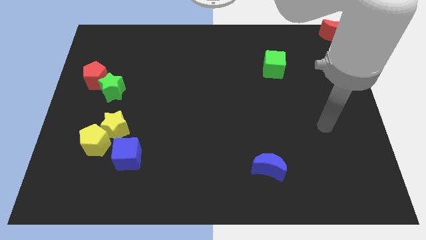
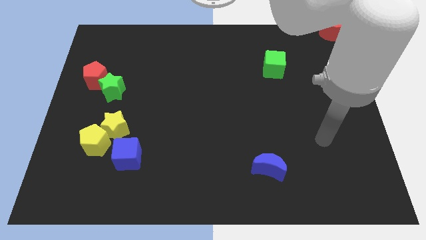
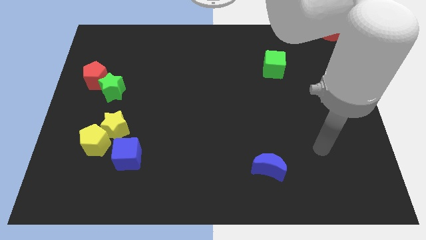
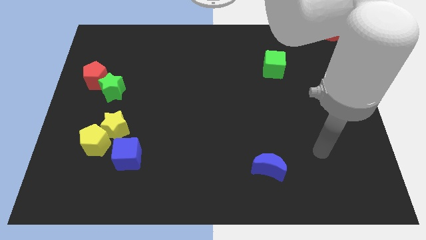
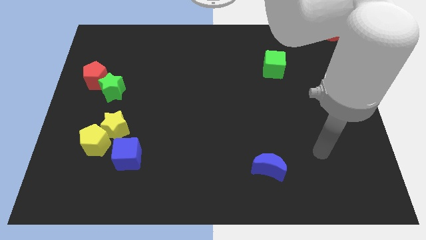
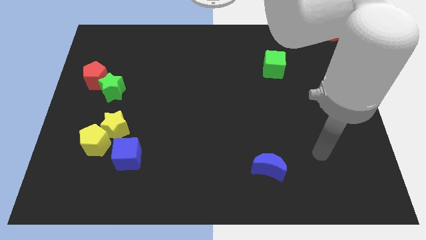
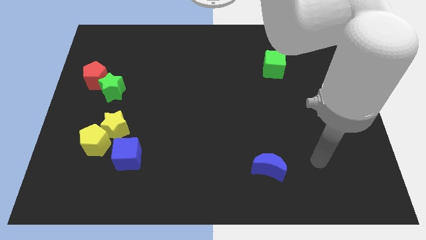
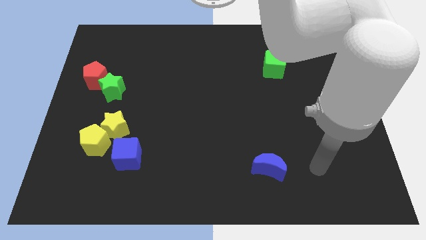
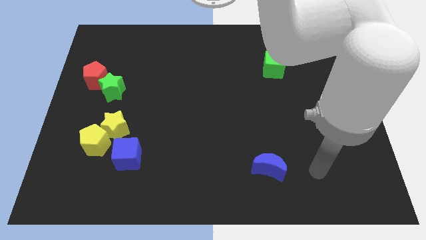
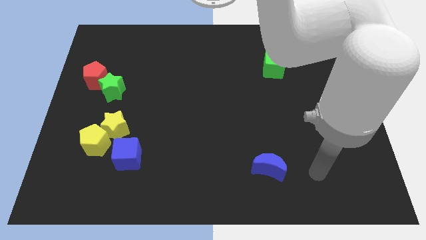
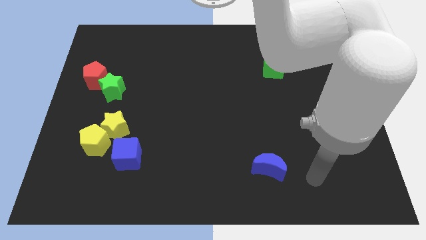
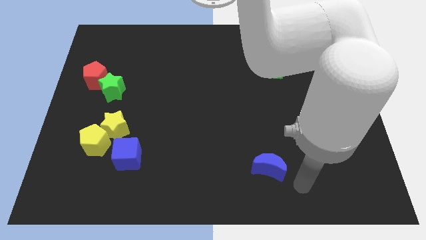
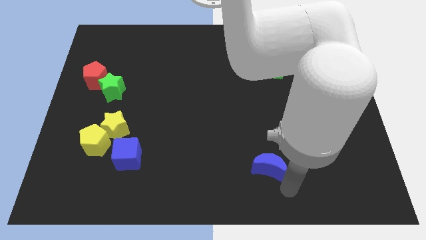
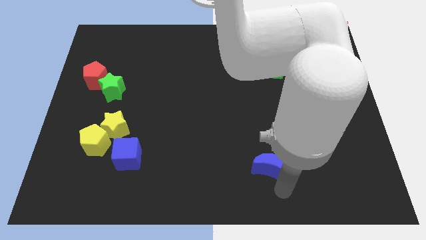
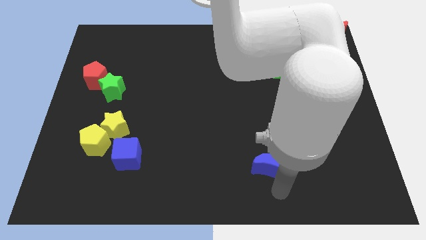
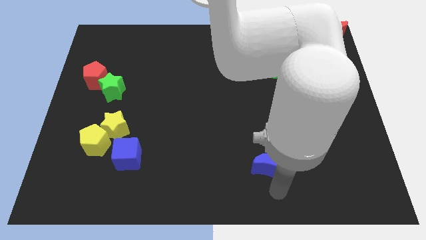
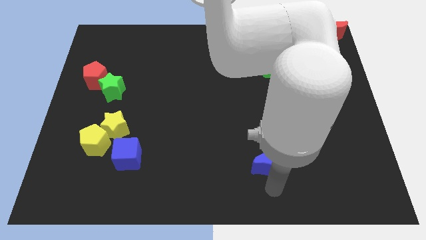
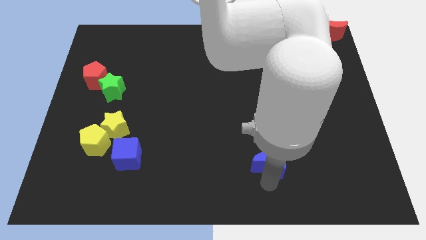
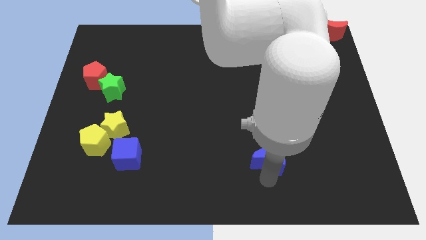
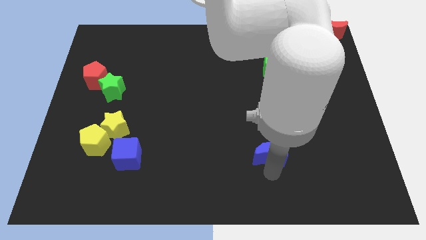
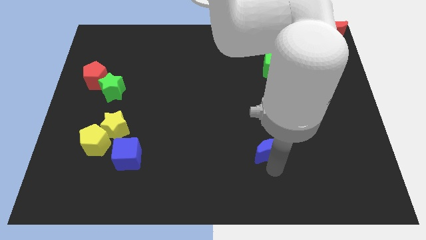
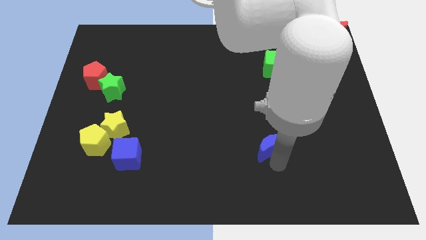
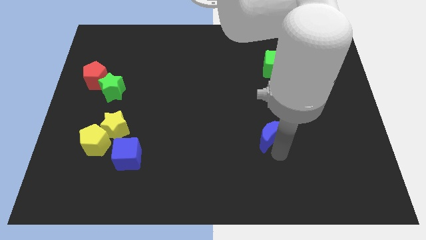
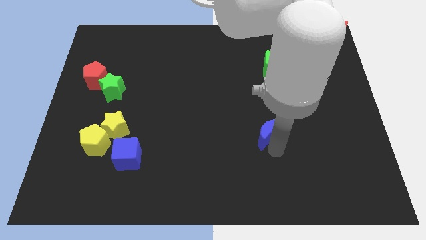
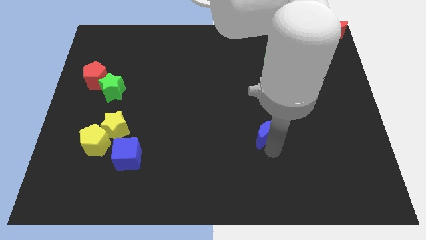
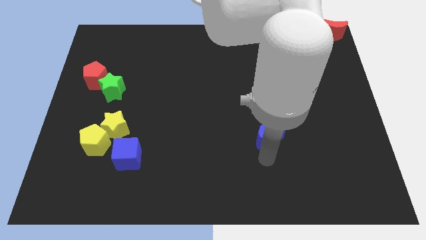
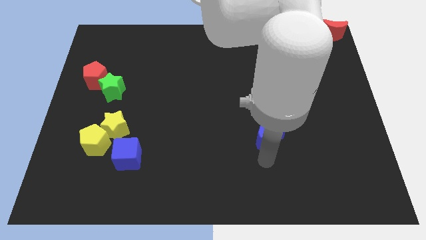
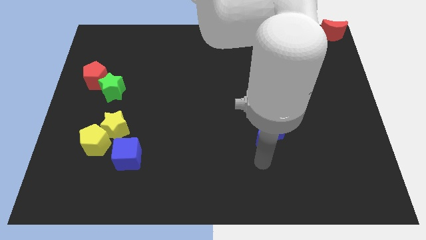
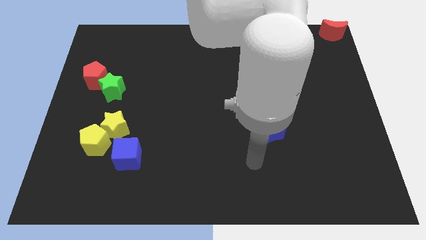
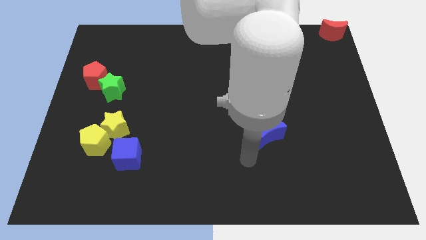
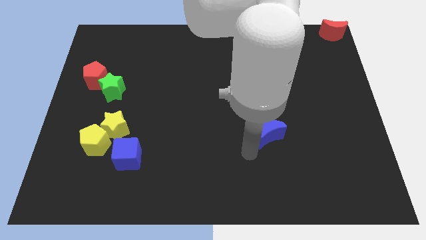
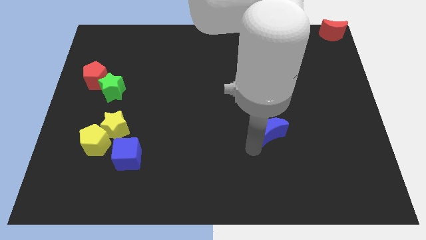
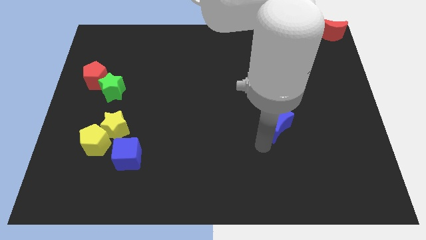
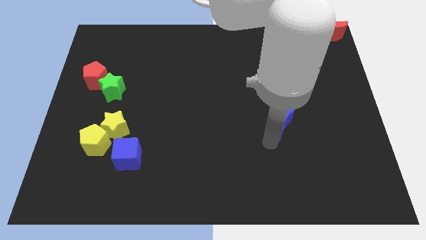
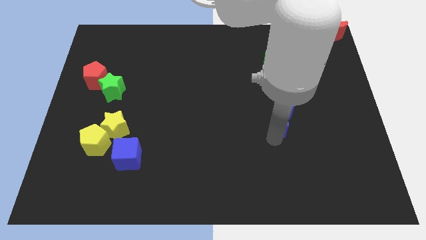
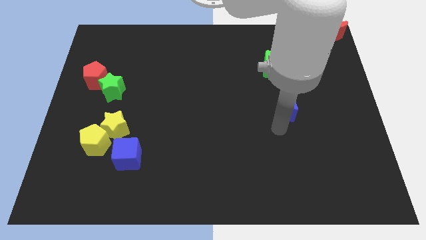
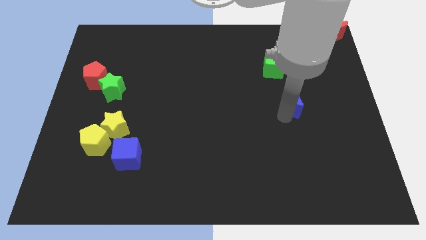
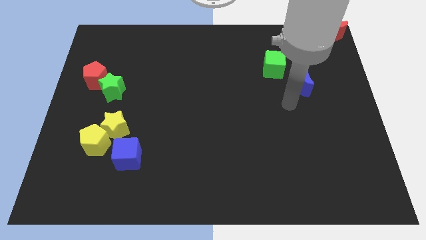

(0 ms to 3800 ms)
move the blue crescent towards top

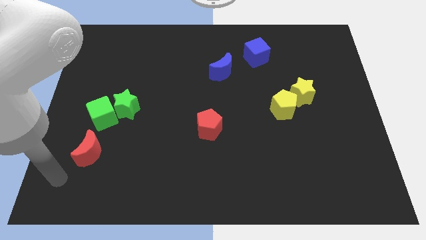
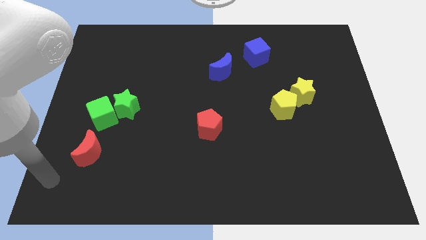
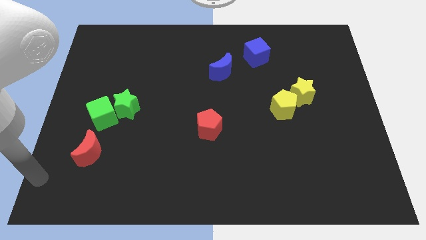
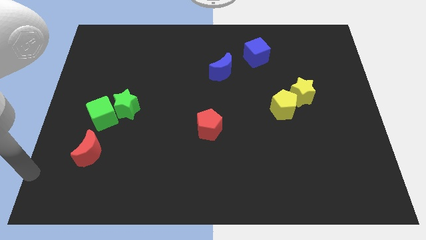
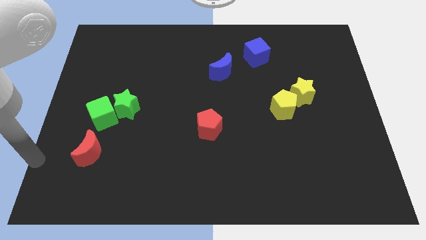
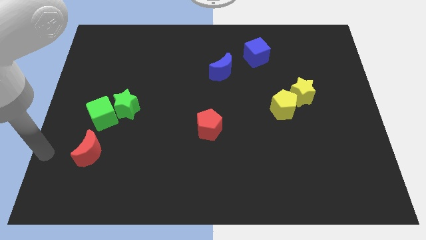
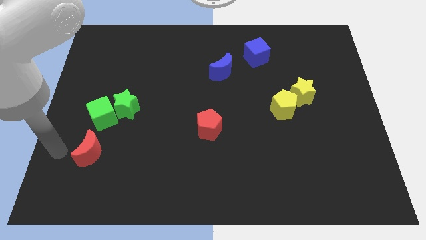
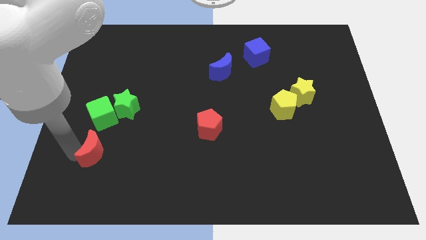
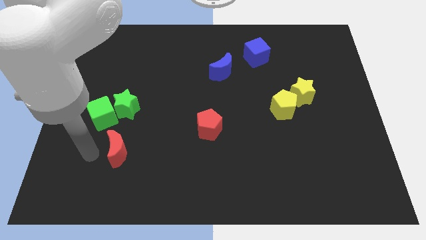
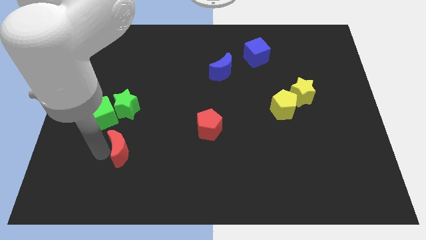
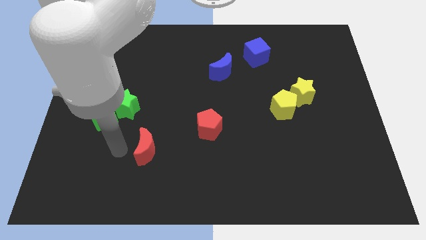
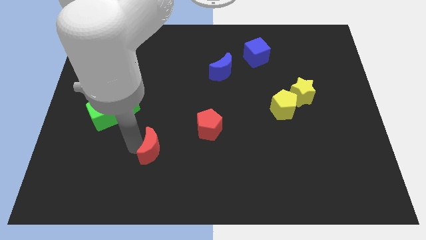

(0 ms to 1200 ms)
move the red moon towards the center

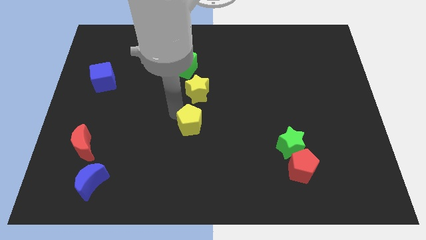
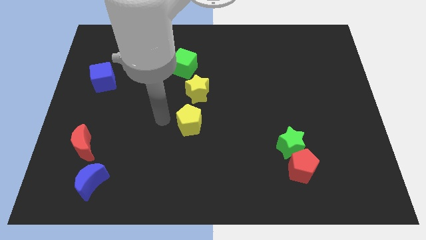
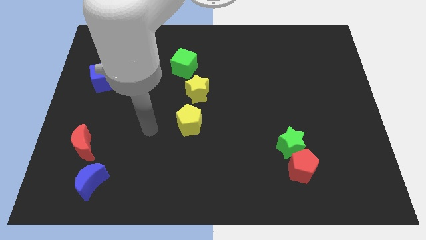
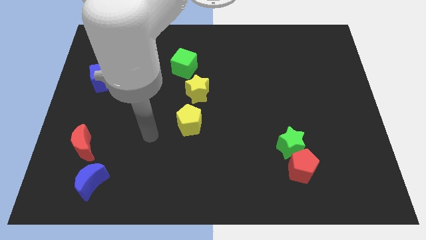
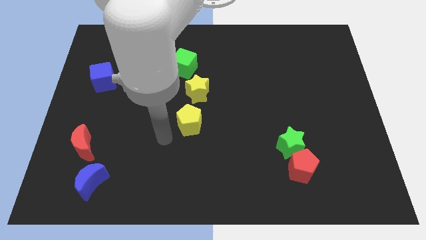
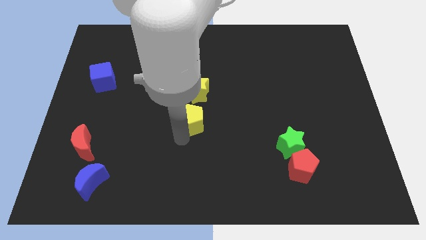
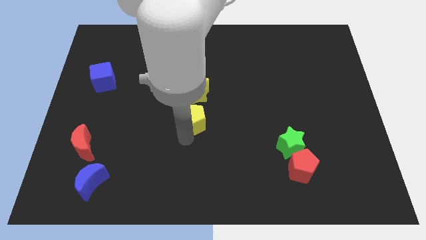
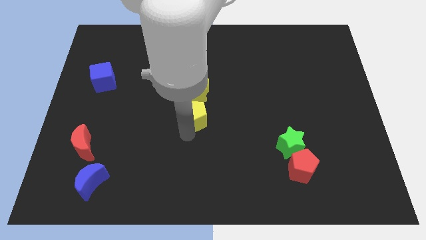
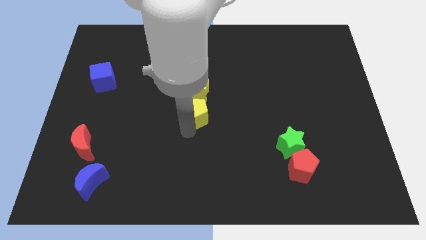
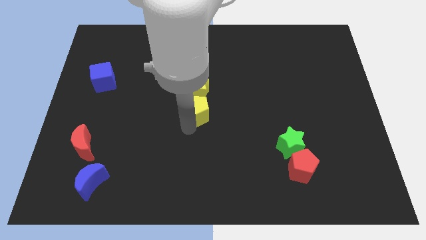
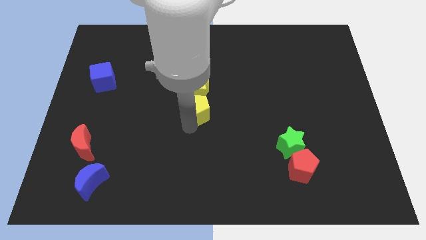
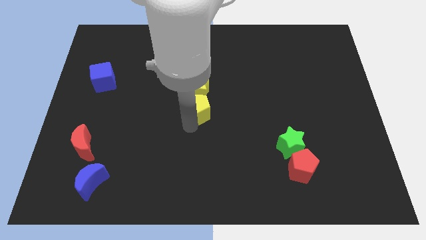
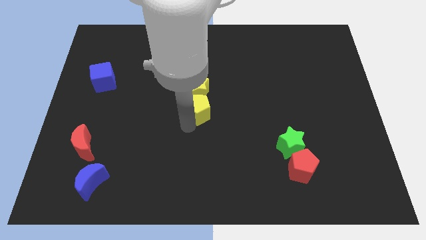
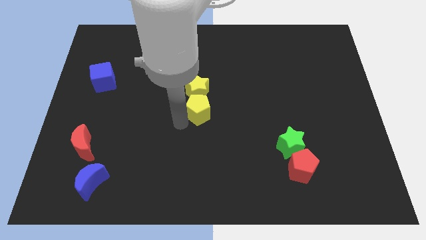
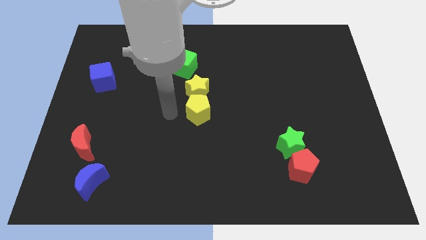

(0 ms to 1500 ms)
place the yellow pentagon to the bottom of the yellow star

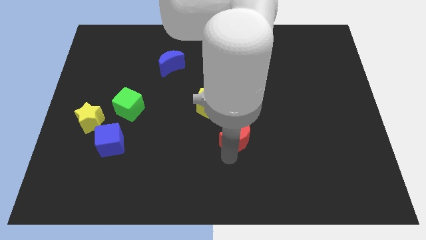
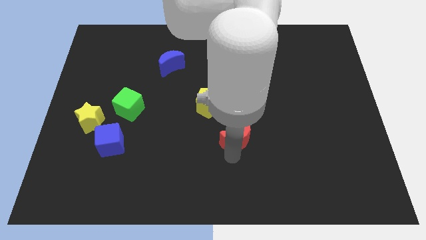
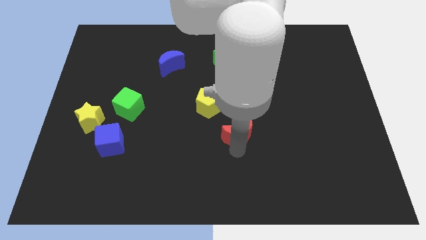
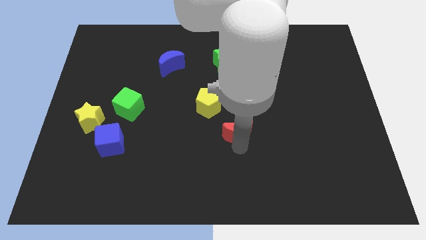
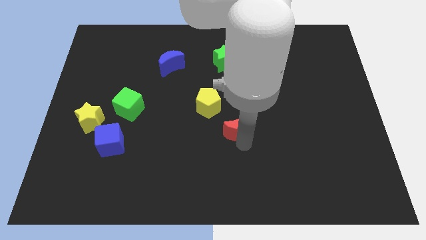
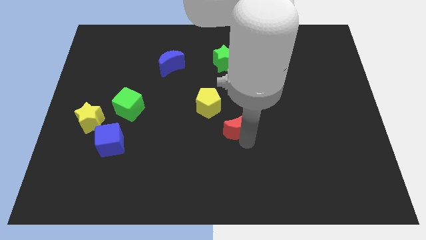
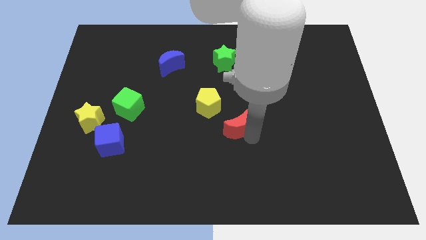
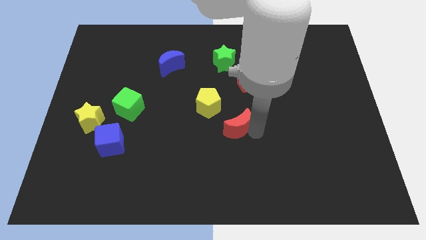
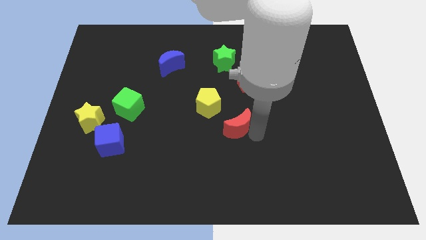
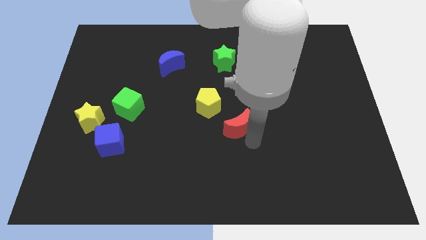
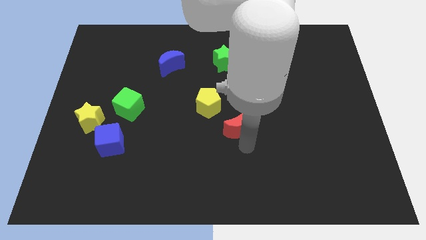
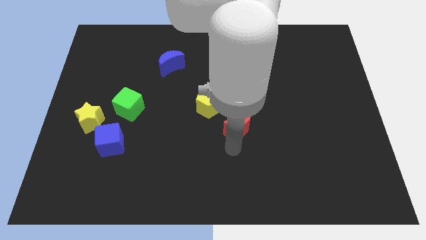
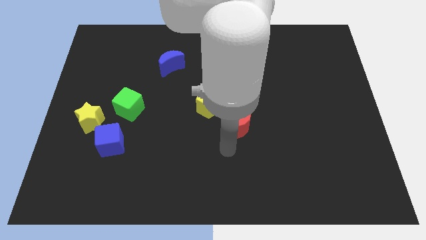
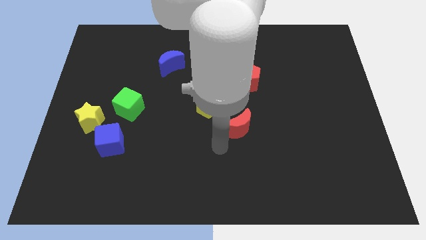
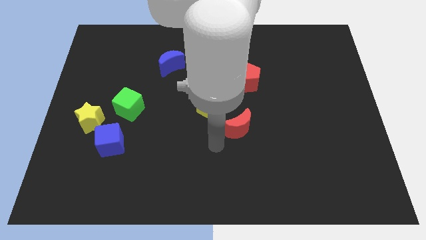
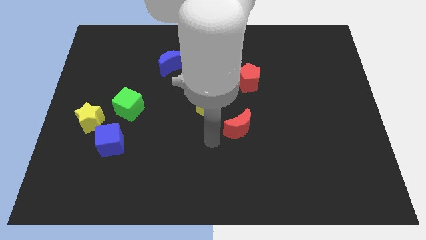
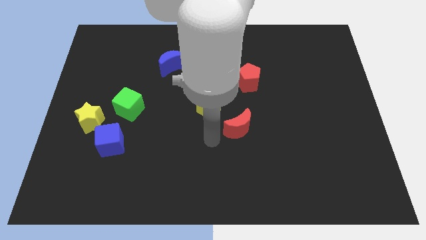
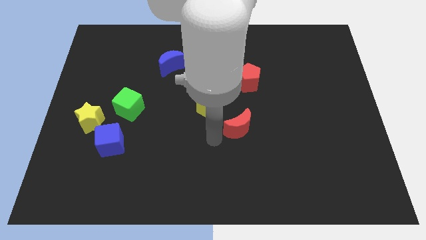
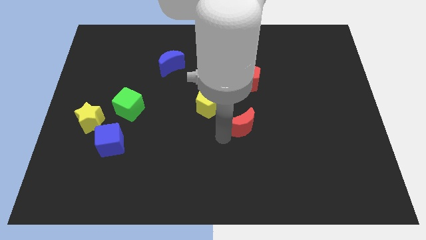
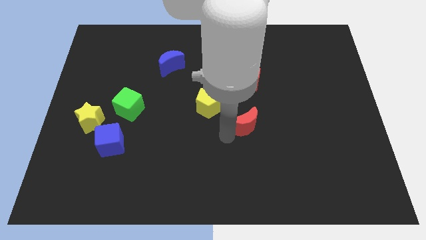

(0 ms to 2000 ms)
push the red crescent diagonally right below the yellow pentagon

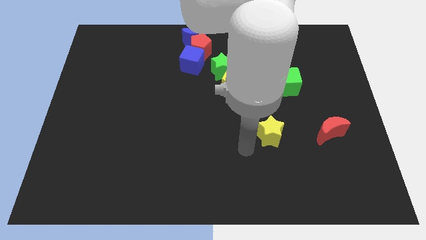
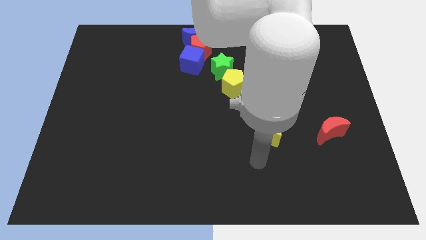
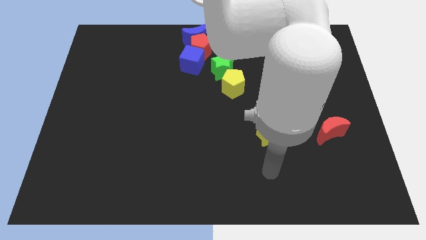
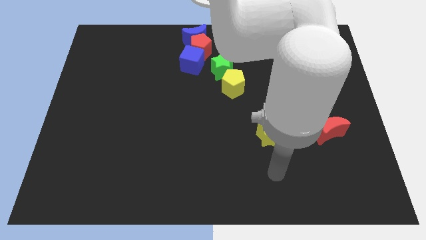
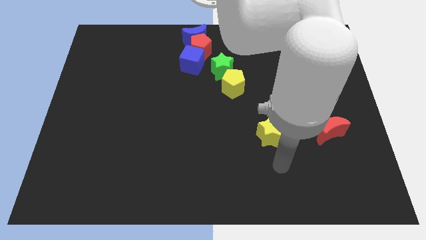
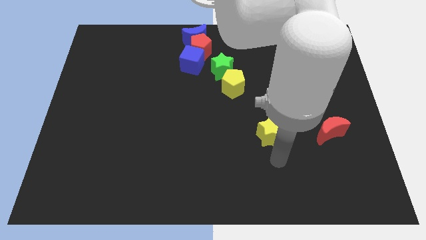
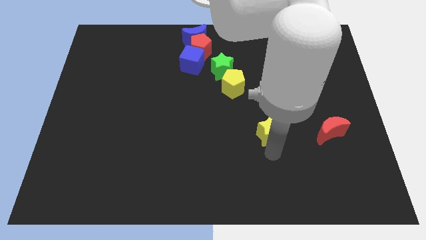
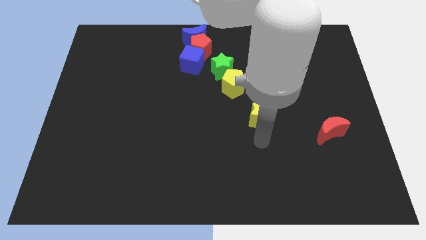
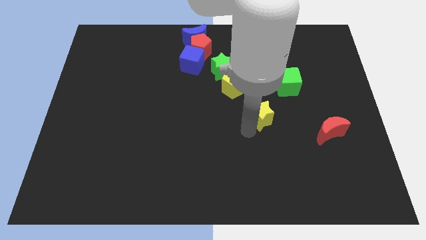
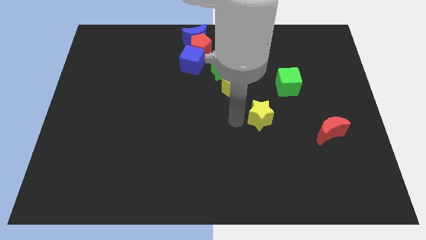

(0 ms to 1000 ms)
move the yellow star slightly towards the yellow pentagon
